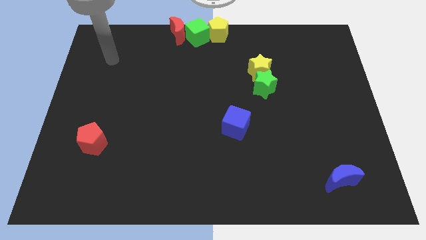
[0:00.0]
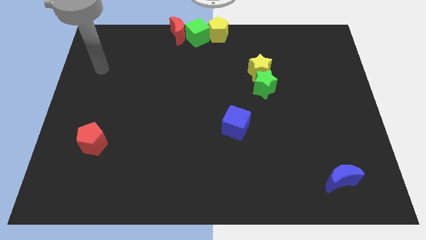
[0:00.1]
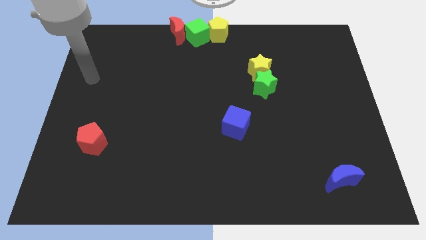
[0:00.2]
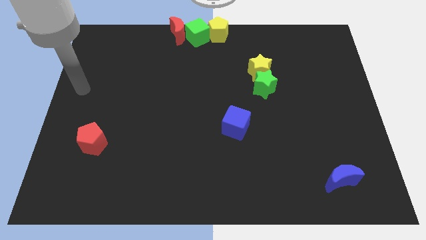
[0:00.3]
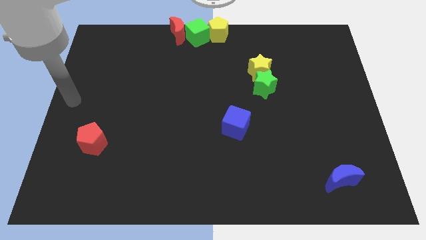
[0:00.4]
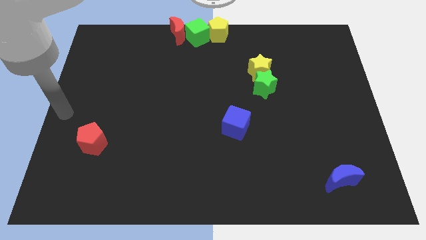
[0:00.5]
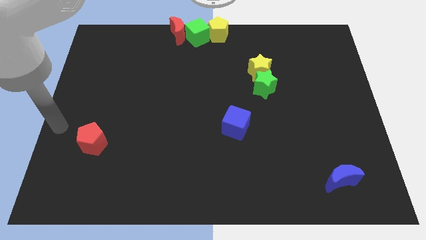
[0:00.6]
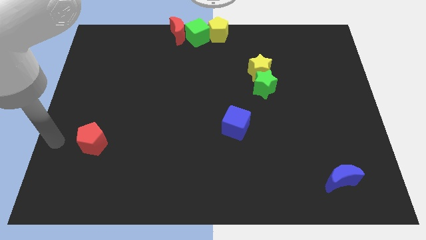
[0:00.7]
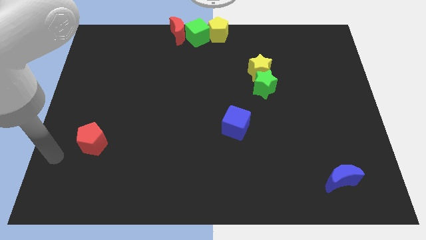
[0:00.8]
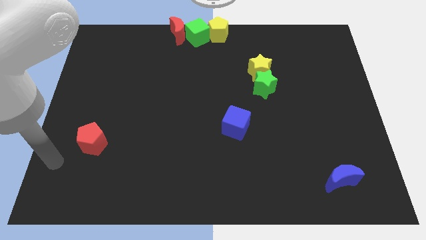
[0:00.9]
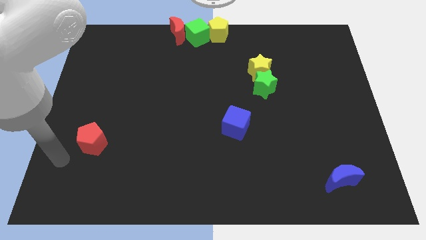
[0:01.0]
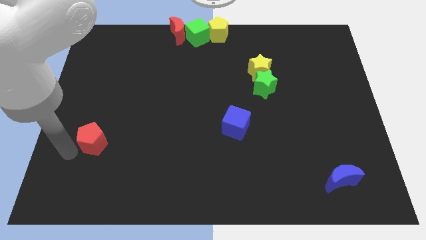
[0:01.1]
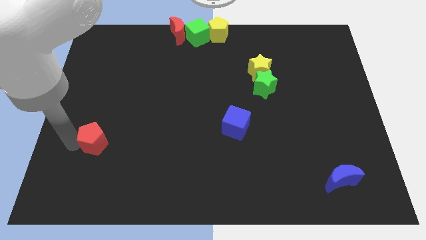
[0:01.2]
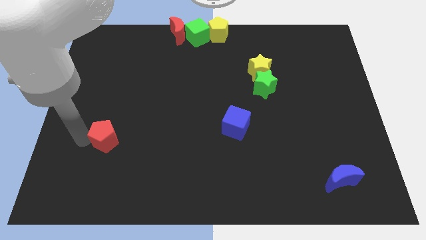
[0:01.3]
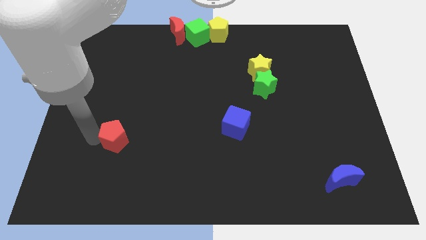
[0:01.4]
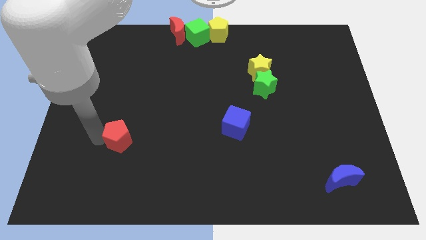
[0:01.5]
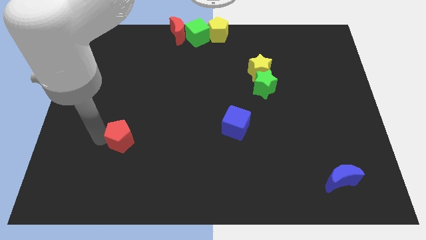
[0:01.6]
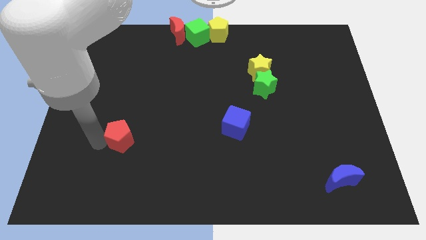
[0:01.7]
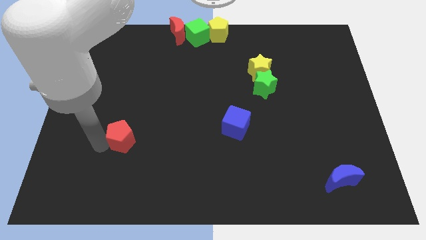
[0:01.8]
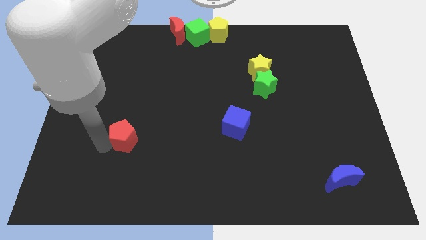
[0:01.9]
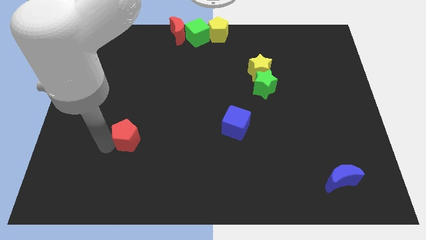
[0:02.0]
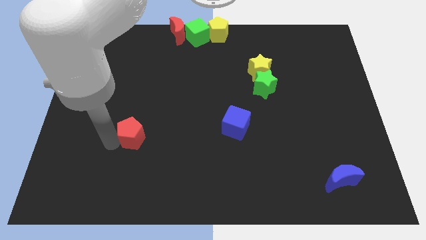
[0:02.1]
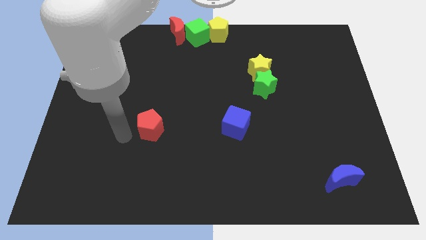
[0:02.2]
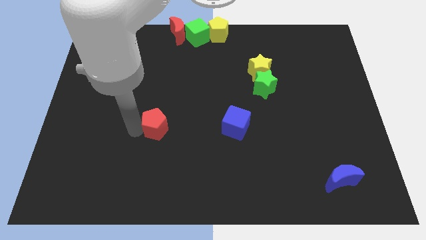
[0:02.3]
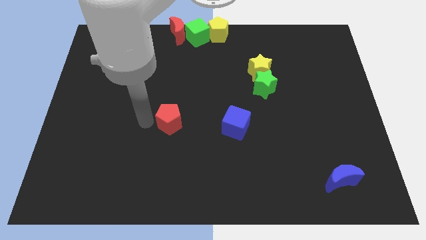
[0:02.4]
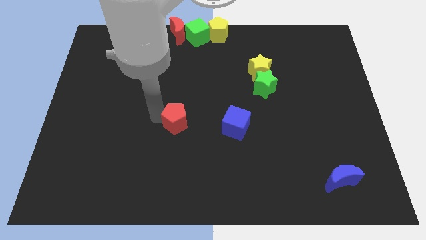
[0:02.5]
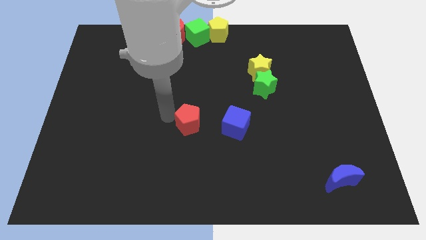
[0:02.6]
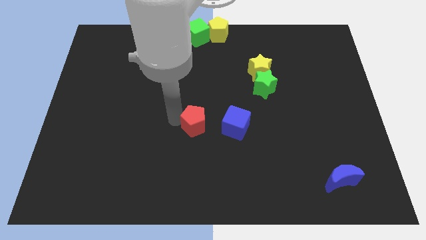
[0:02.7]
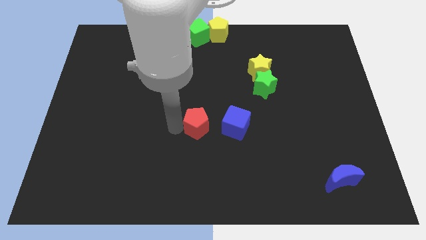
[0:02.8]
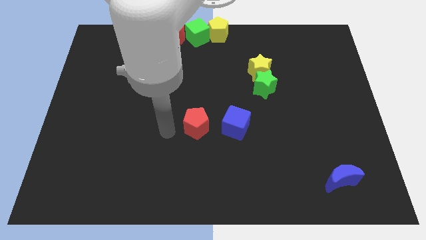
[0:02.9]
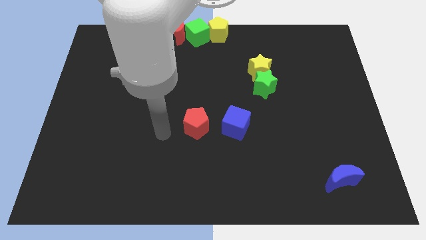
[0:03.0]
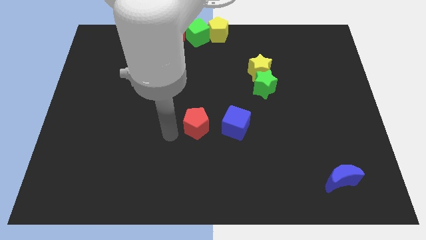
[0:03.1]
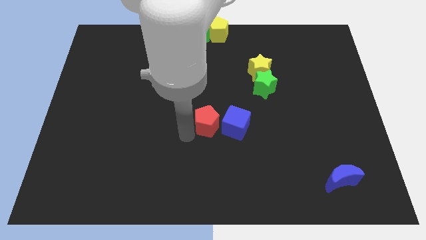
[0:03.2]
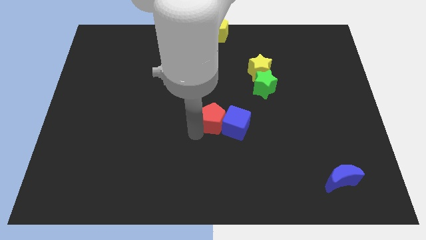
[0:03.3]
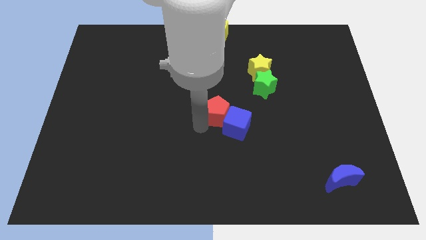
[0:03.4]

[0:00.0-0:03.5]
push the red pentagon into the blue cube

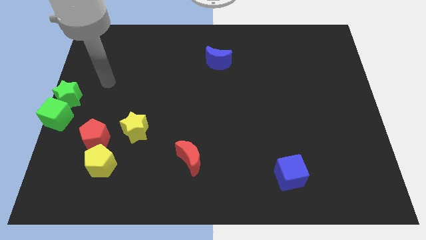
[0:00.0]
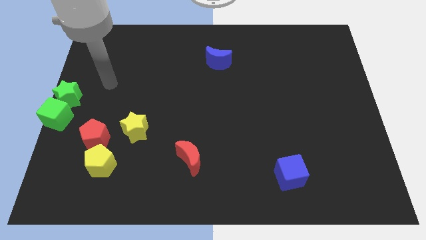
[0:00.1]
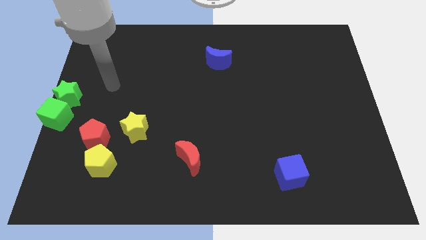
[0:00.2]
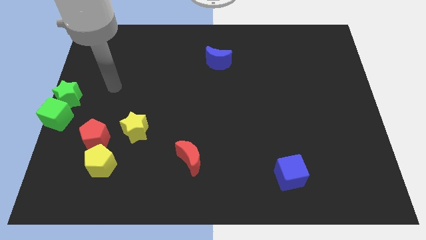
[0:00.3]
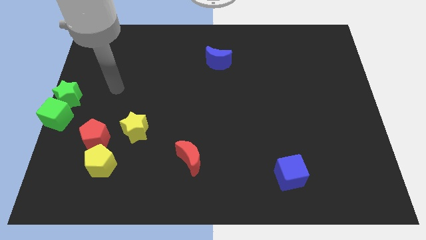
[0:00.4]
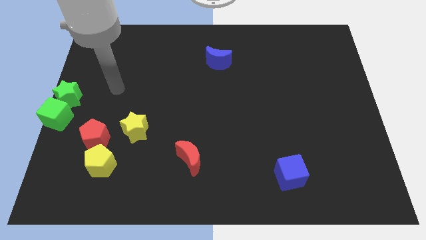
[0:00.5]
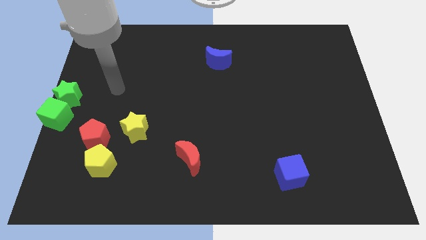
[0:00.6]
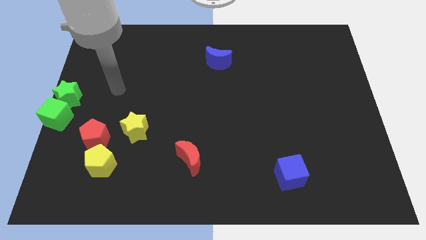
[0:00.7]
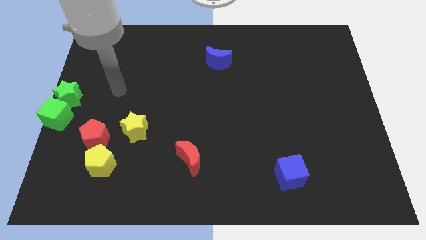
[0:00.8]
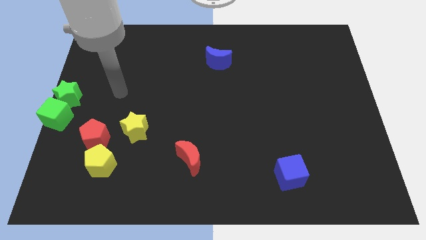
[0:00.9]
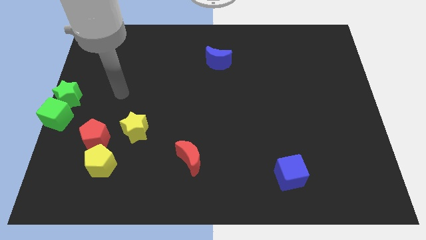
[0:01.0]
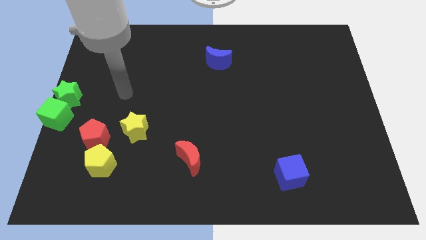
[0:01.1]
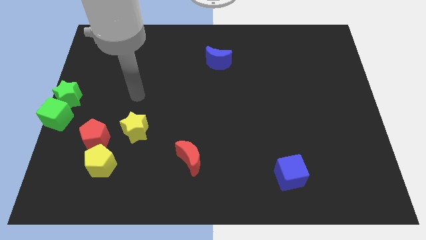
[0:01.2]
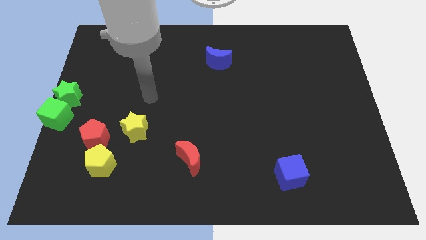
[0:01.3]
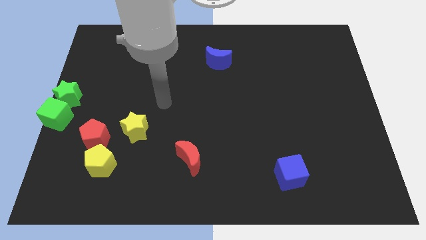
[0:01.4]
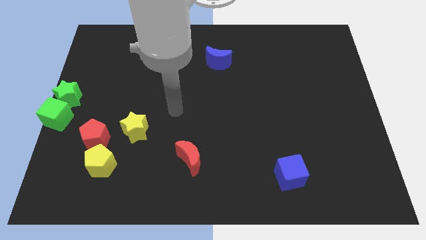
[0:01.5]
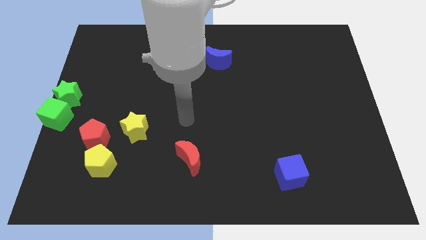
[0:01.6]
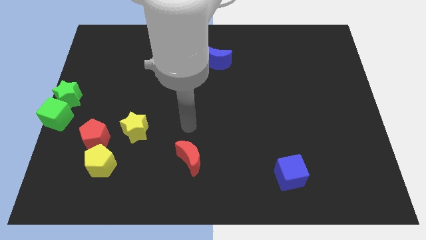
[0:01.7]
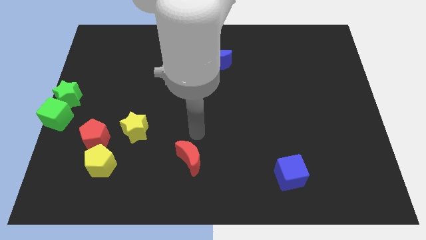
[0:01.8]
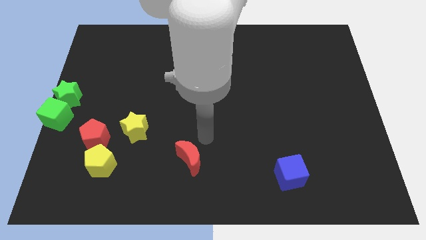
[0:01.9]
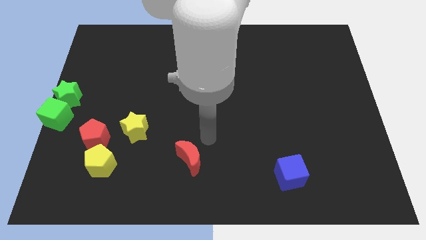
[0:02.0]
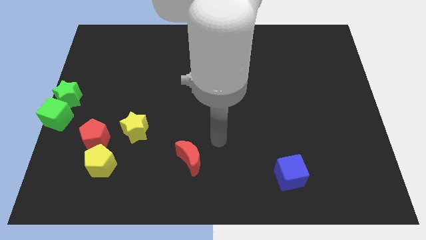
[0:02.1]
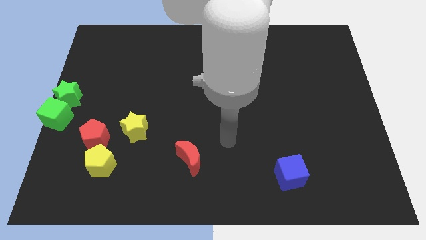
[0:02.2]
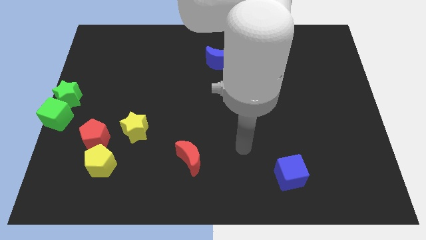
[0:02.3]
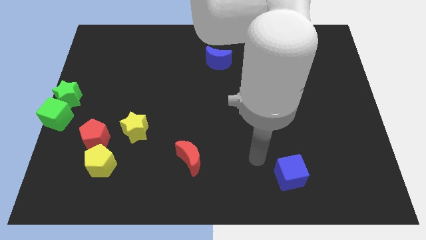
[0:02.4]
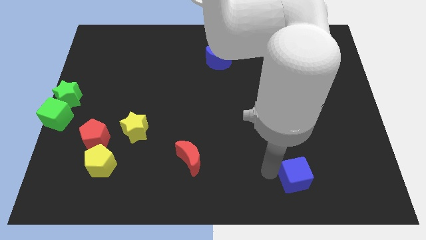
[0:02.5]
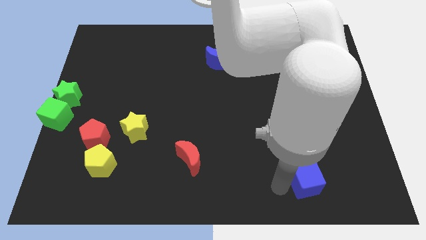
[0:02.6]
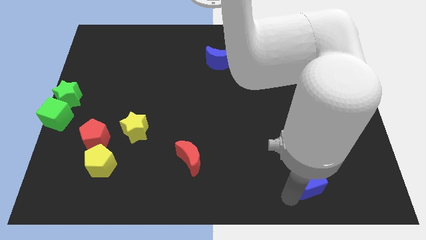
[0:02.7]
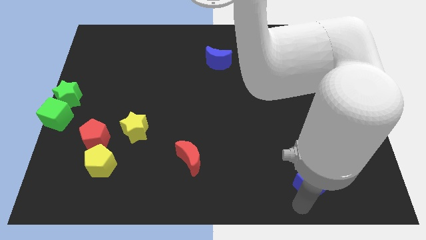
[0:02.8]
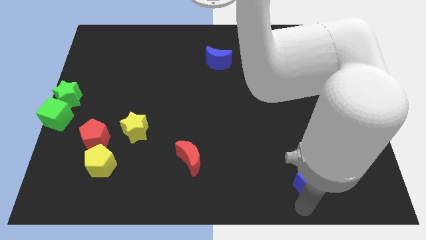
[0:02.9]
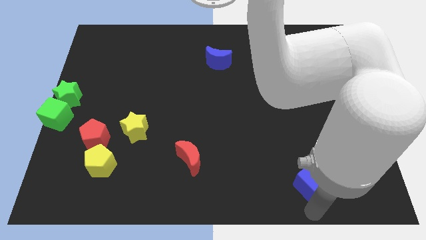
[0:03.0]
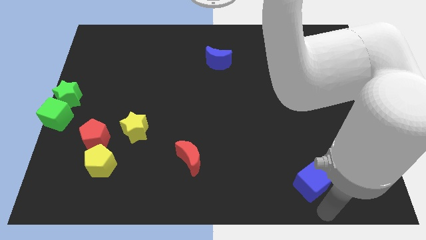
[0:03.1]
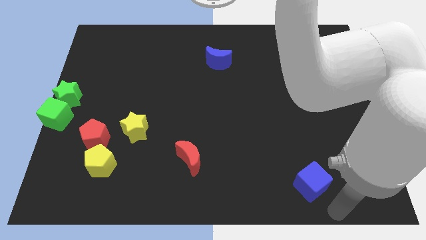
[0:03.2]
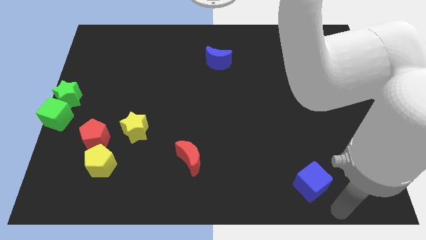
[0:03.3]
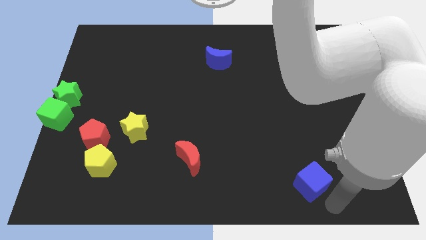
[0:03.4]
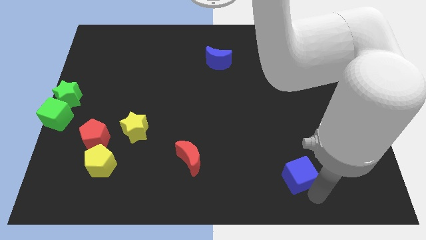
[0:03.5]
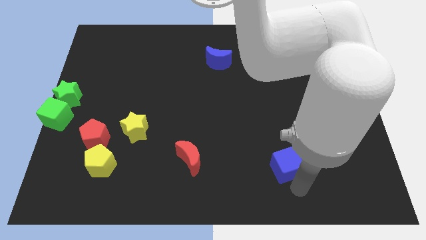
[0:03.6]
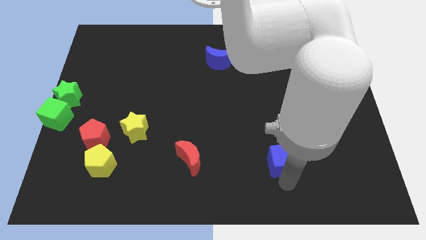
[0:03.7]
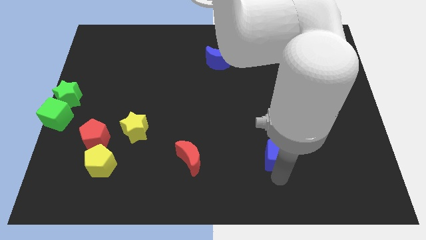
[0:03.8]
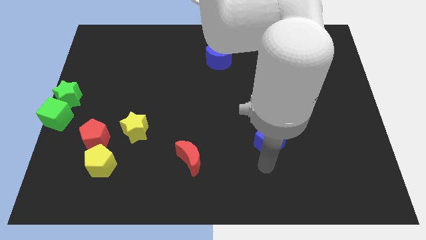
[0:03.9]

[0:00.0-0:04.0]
put the blue cube parallel right to the red moon

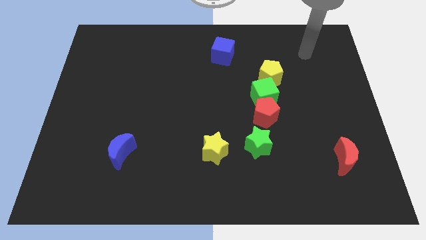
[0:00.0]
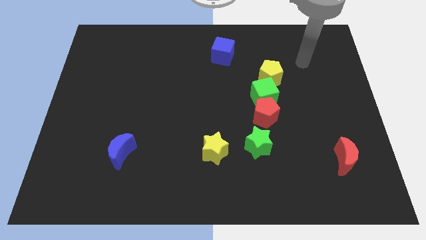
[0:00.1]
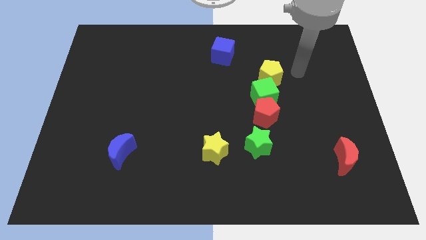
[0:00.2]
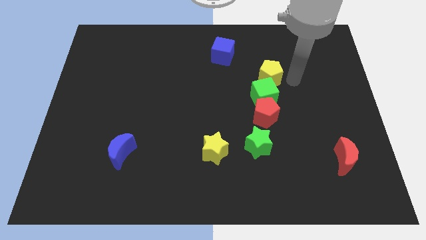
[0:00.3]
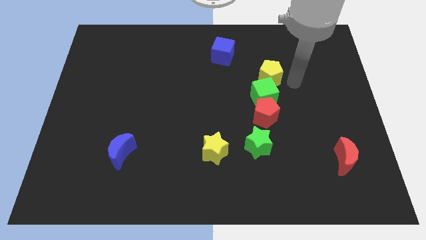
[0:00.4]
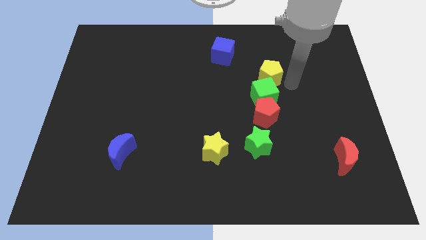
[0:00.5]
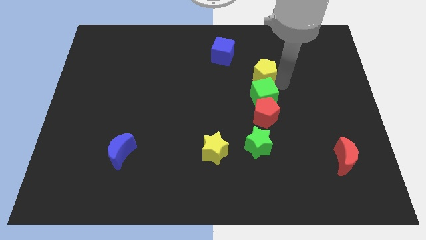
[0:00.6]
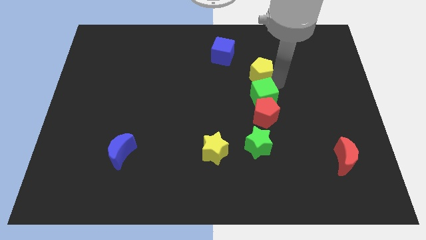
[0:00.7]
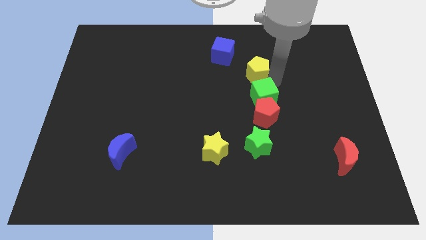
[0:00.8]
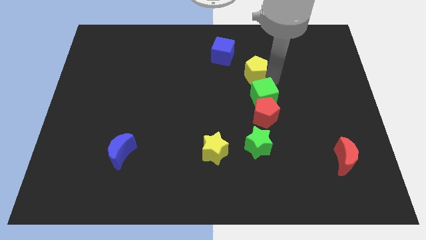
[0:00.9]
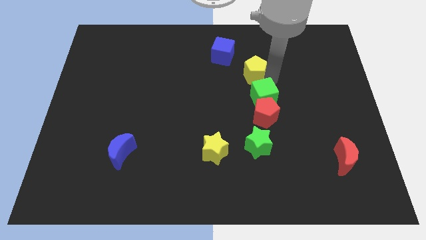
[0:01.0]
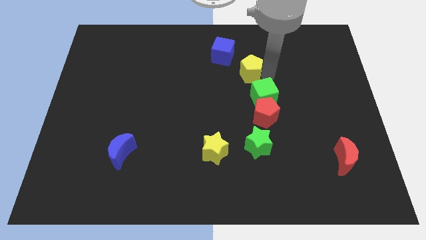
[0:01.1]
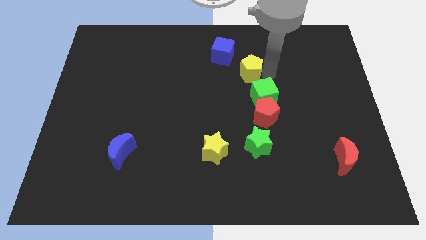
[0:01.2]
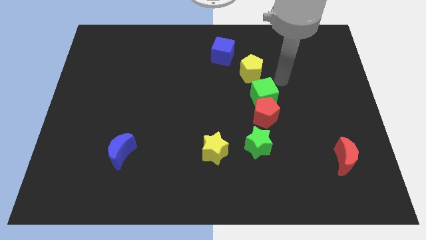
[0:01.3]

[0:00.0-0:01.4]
move the yellow pentagon diagonally to the blue cube
